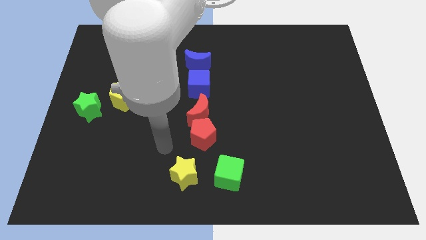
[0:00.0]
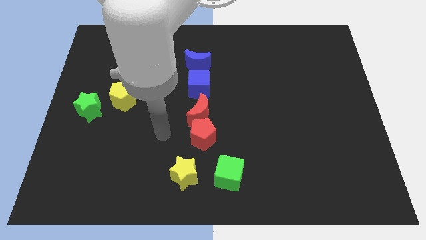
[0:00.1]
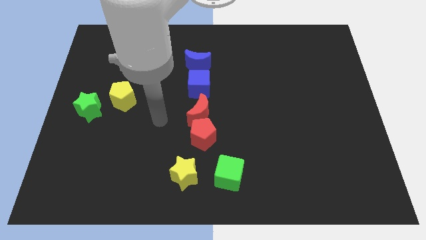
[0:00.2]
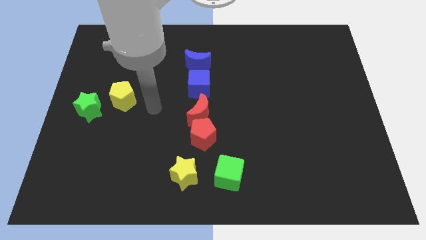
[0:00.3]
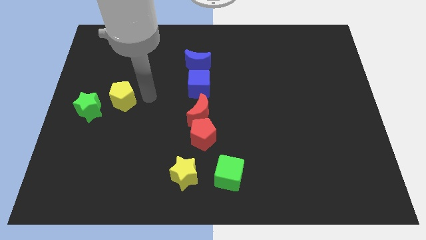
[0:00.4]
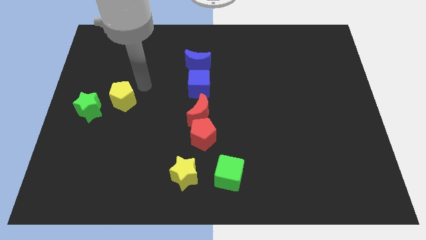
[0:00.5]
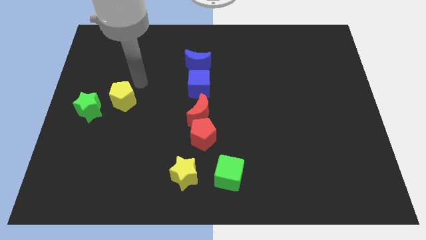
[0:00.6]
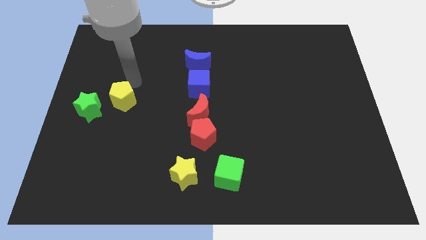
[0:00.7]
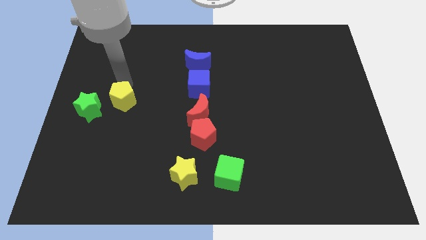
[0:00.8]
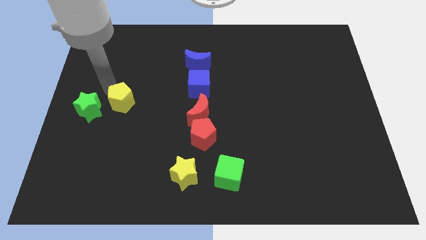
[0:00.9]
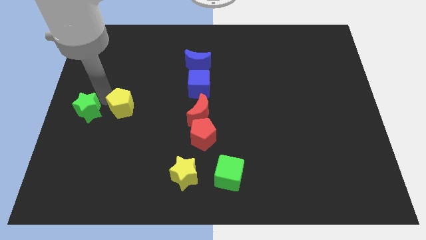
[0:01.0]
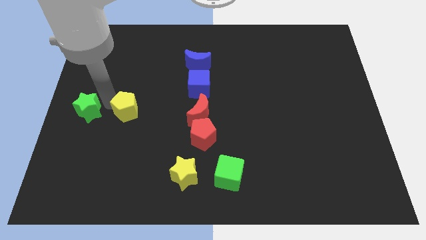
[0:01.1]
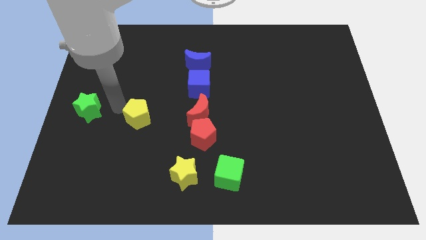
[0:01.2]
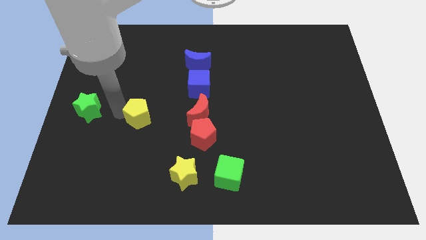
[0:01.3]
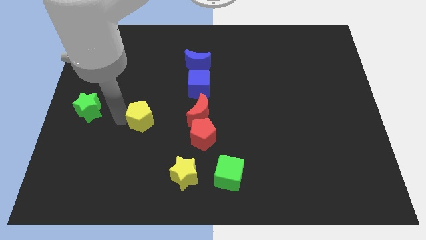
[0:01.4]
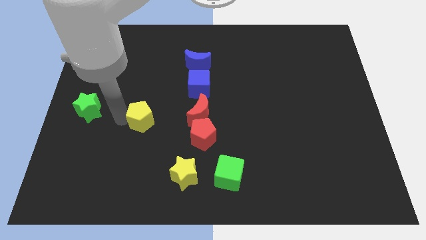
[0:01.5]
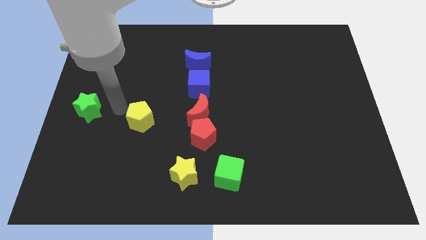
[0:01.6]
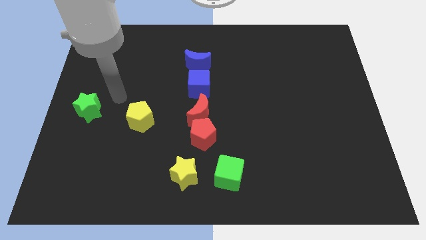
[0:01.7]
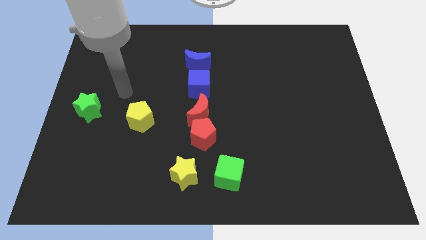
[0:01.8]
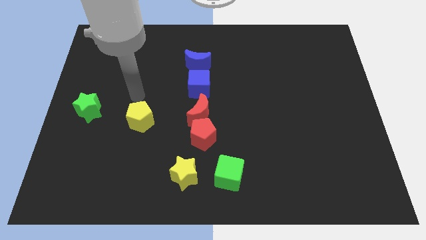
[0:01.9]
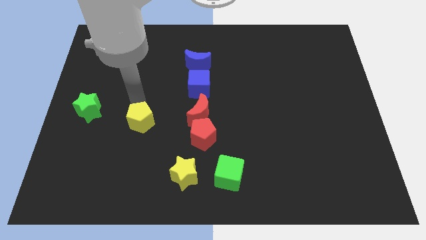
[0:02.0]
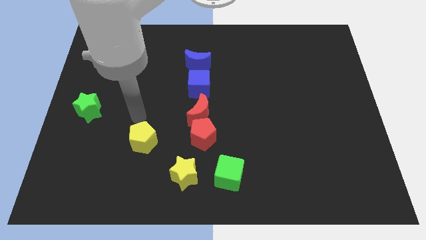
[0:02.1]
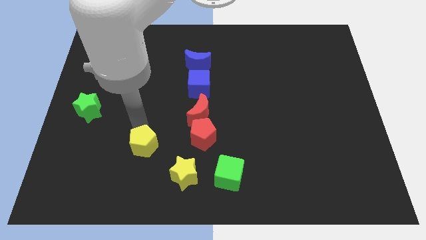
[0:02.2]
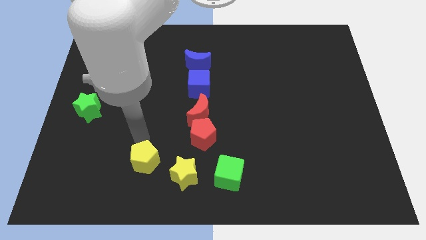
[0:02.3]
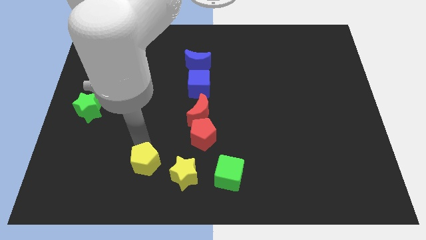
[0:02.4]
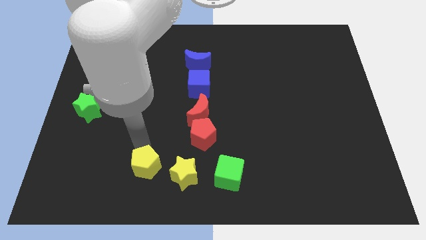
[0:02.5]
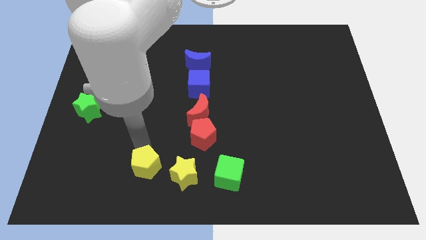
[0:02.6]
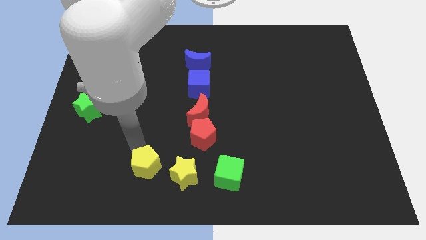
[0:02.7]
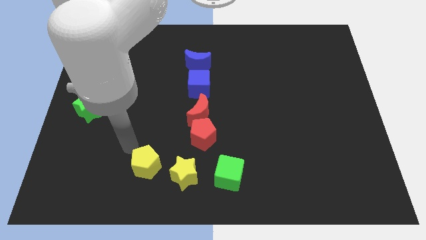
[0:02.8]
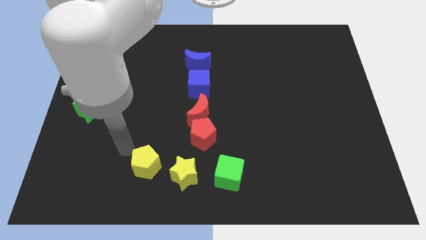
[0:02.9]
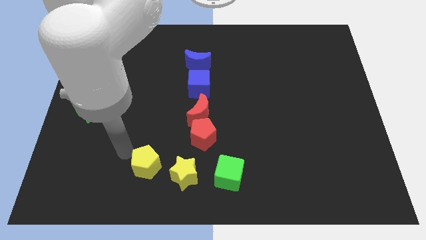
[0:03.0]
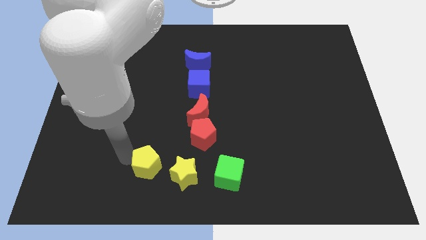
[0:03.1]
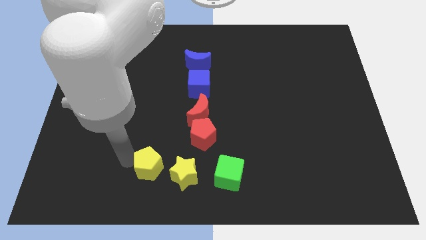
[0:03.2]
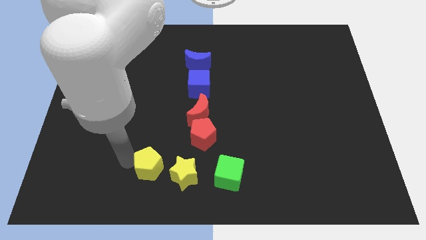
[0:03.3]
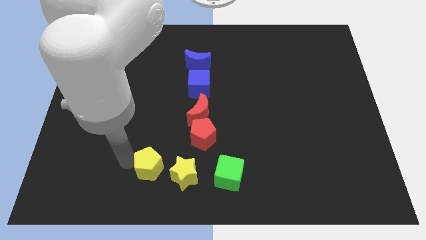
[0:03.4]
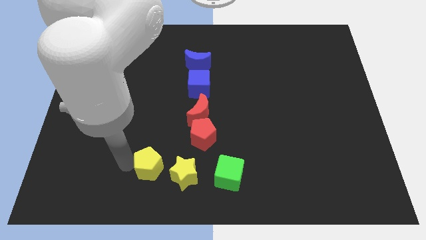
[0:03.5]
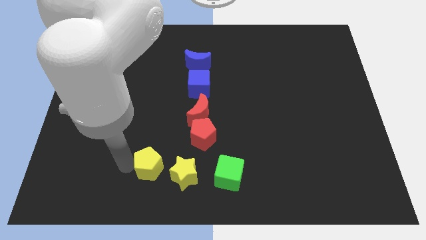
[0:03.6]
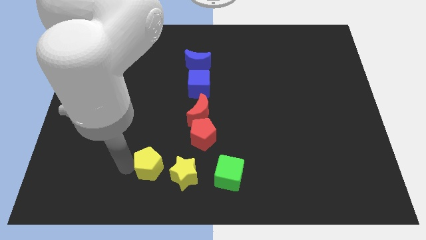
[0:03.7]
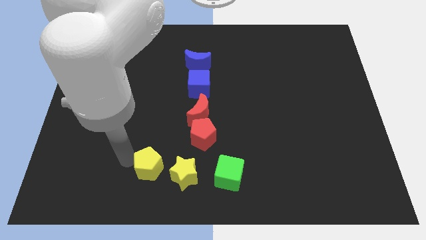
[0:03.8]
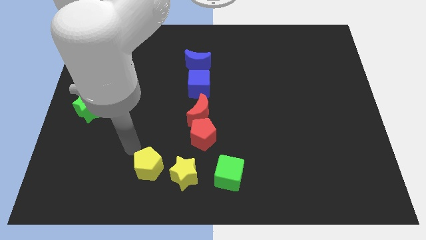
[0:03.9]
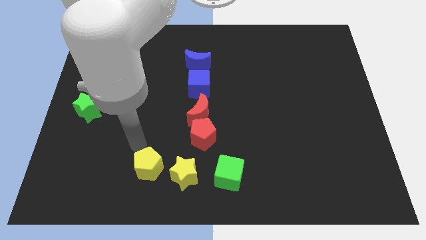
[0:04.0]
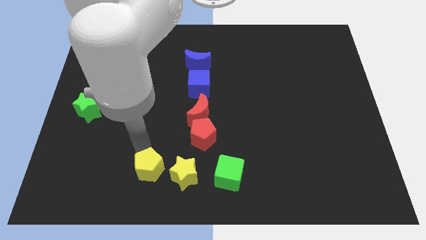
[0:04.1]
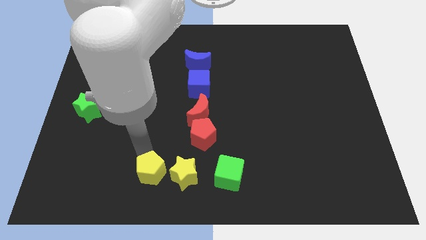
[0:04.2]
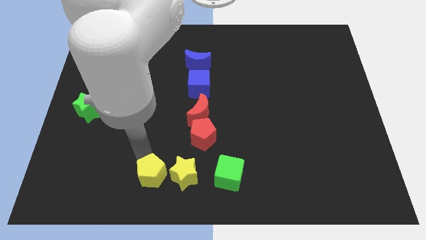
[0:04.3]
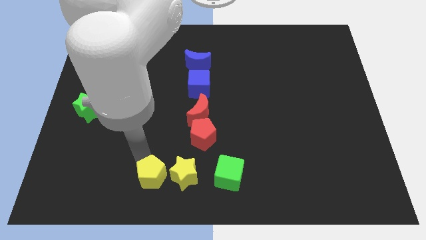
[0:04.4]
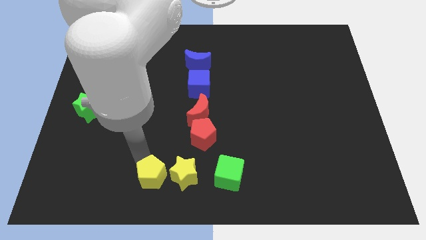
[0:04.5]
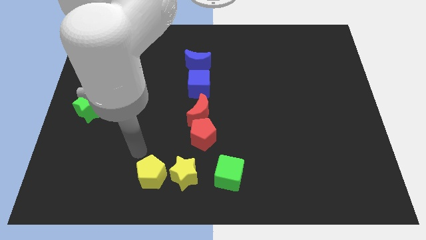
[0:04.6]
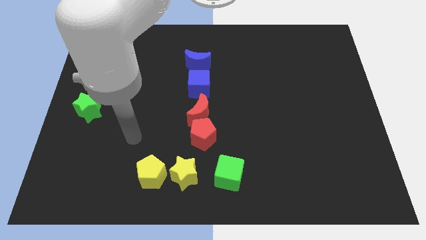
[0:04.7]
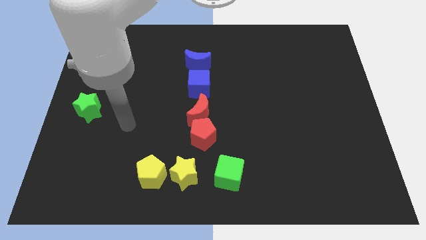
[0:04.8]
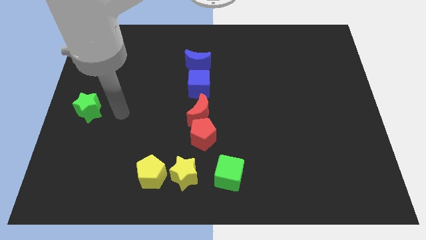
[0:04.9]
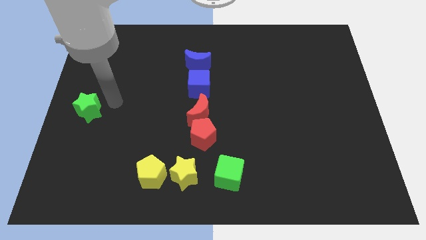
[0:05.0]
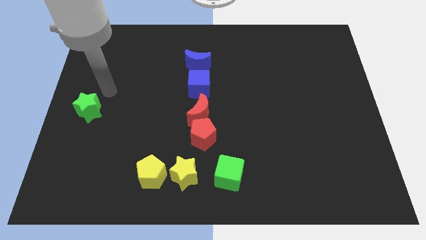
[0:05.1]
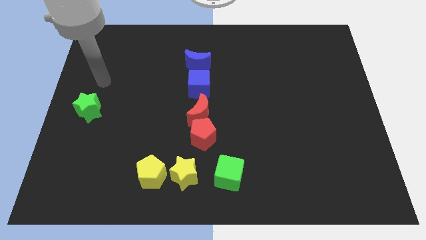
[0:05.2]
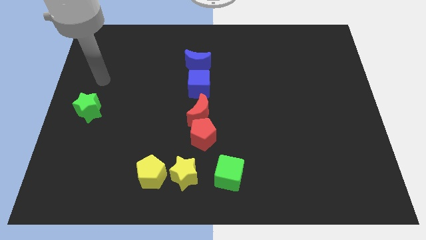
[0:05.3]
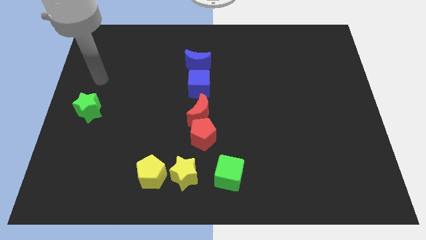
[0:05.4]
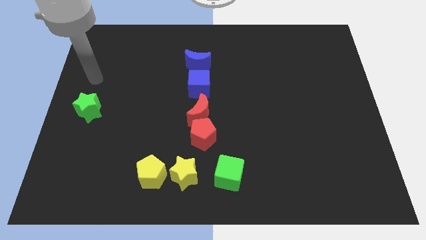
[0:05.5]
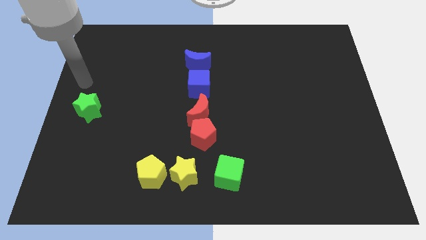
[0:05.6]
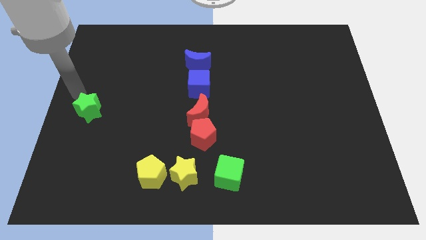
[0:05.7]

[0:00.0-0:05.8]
place the yellow pentagon to the left of the yellow star

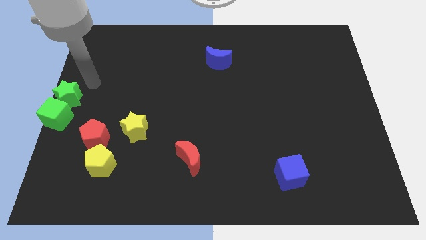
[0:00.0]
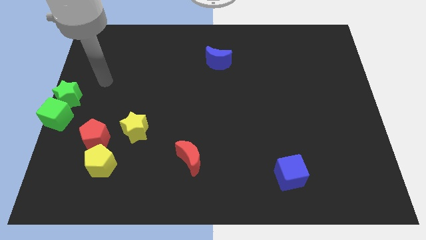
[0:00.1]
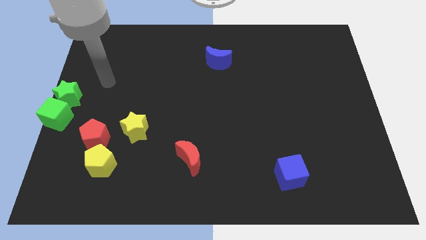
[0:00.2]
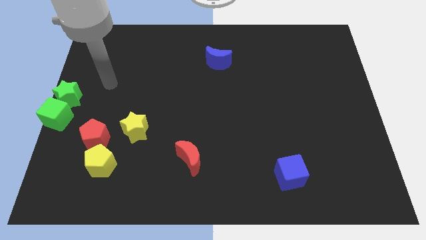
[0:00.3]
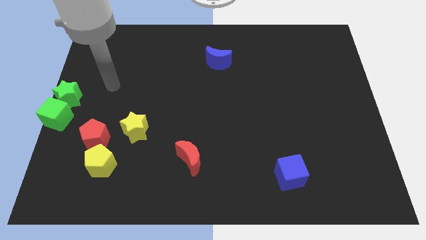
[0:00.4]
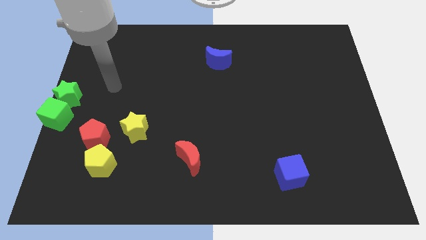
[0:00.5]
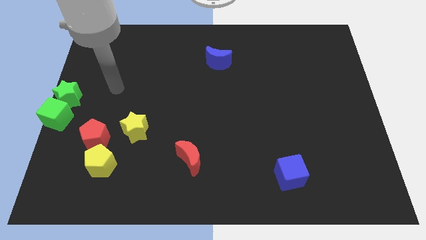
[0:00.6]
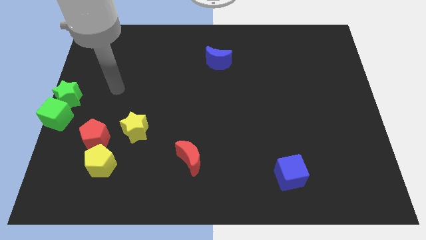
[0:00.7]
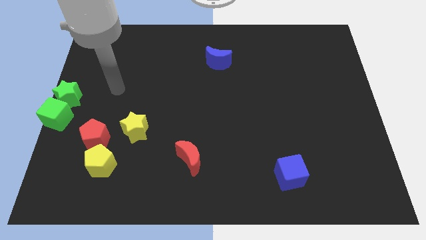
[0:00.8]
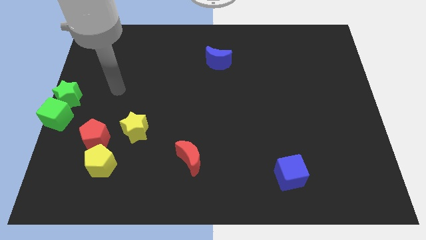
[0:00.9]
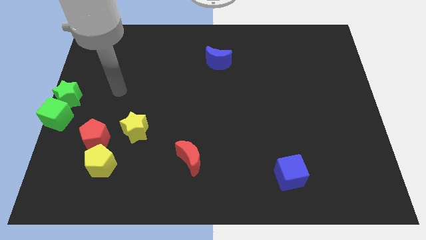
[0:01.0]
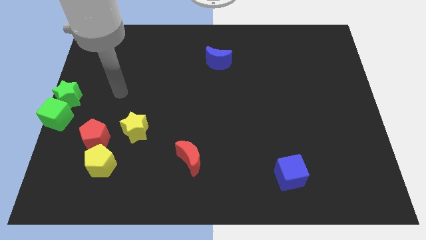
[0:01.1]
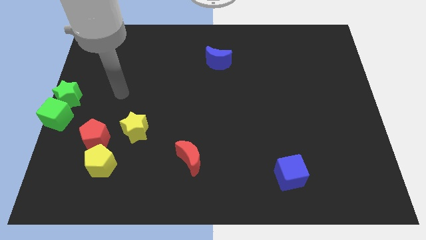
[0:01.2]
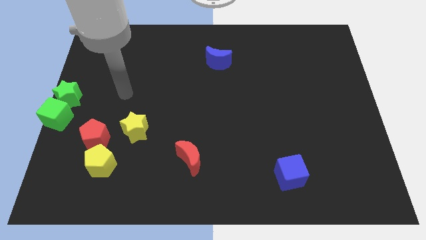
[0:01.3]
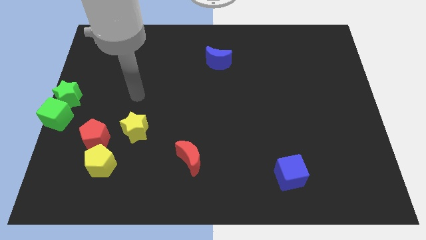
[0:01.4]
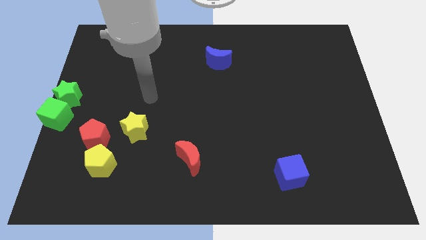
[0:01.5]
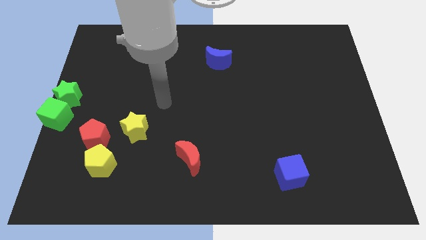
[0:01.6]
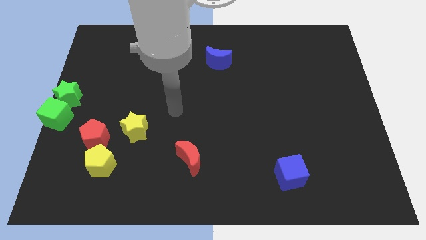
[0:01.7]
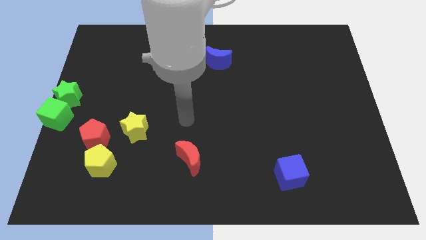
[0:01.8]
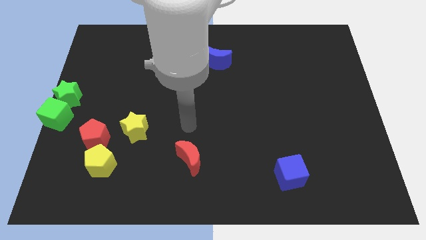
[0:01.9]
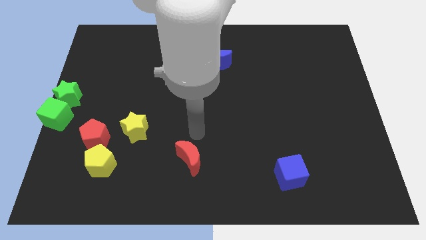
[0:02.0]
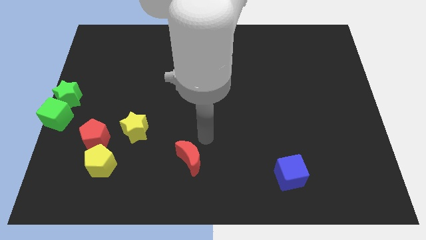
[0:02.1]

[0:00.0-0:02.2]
move your arm away from the green star

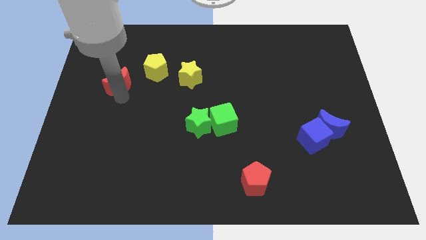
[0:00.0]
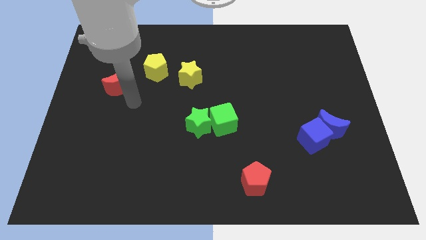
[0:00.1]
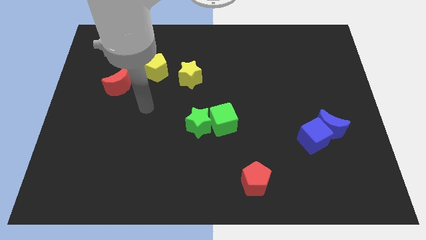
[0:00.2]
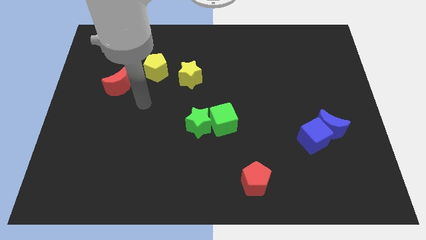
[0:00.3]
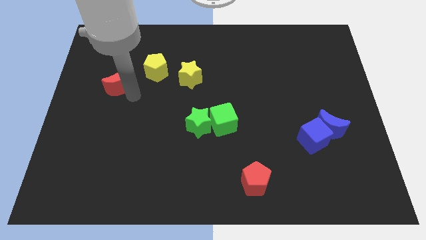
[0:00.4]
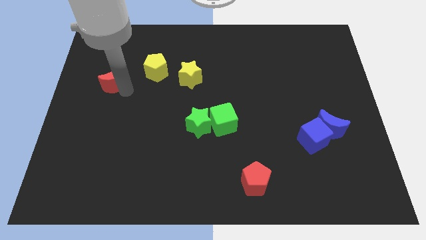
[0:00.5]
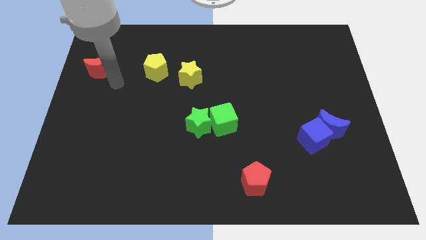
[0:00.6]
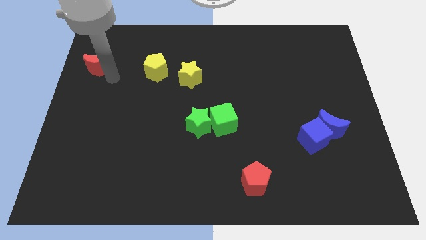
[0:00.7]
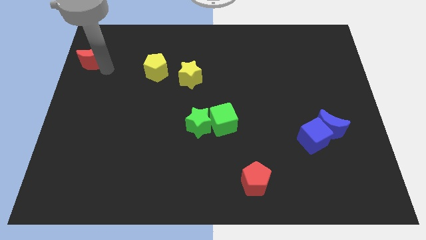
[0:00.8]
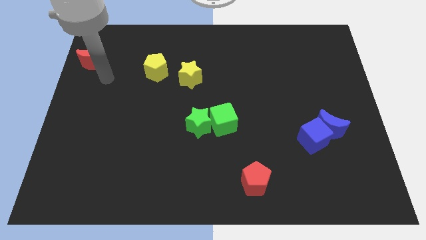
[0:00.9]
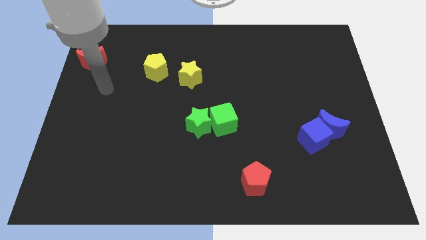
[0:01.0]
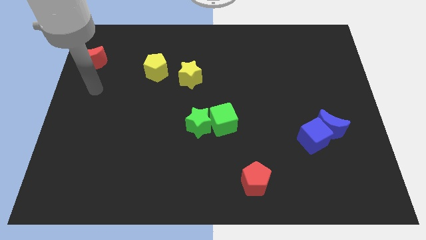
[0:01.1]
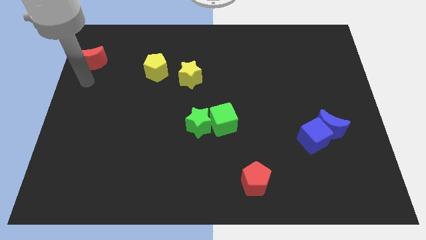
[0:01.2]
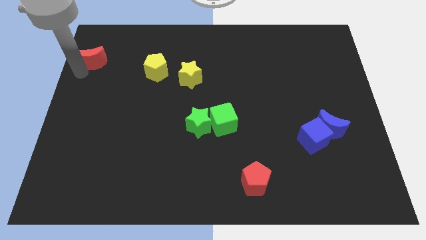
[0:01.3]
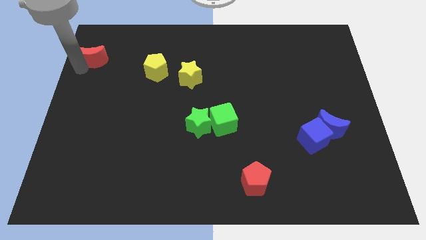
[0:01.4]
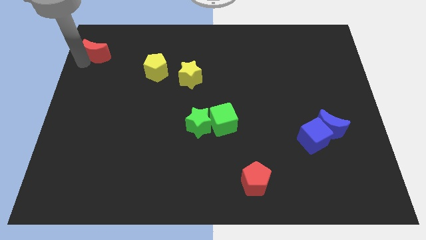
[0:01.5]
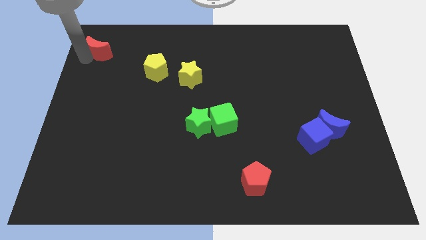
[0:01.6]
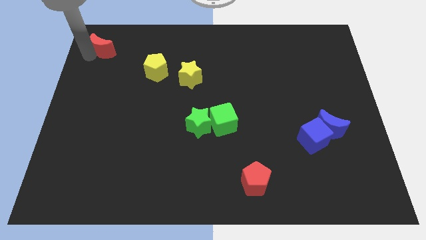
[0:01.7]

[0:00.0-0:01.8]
move the red moon to the top left corner of the board
